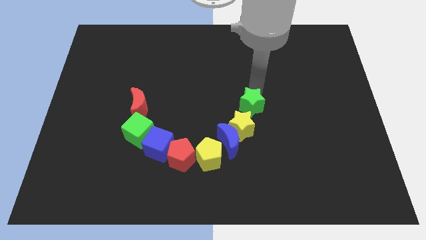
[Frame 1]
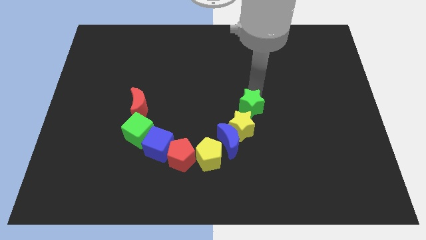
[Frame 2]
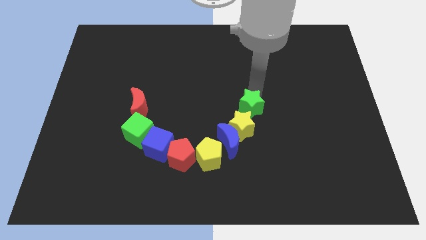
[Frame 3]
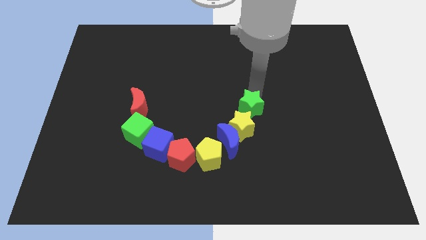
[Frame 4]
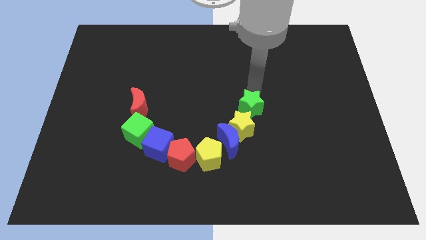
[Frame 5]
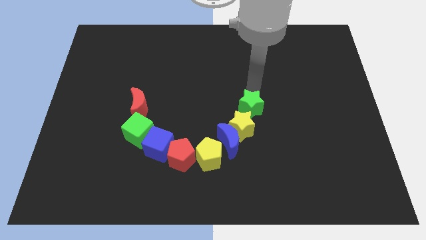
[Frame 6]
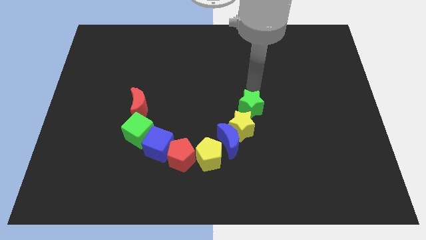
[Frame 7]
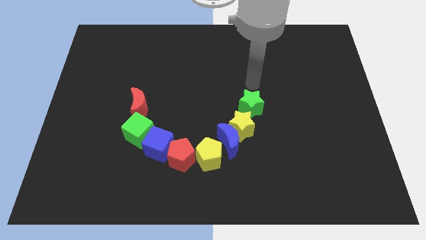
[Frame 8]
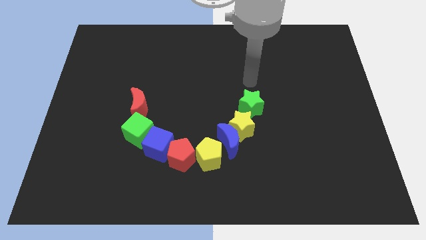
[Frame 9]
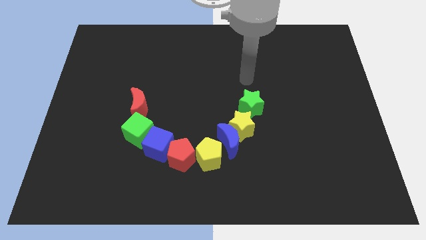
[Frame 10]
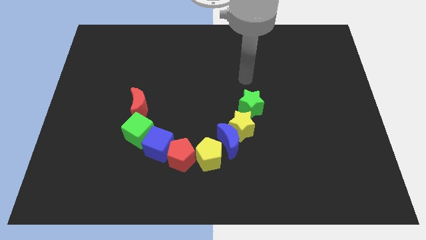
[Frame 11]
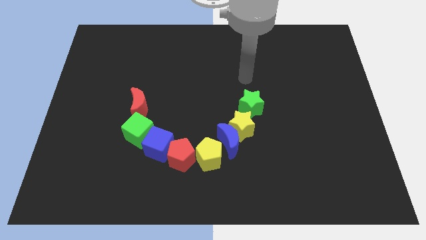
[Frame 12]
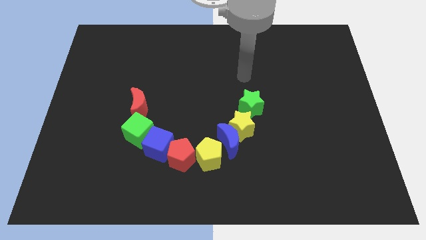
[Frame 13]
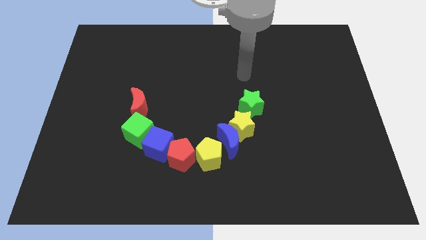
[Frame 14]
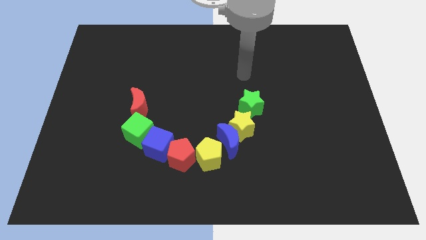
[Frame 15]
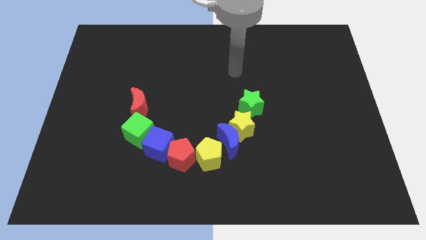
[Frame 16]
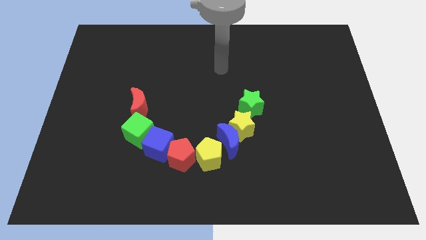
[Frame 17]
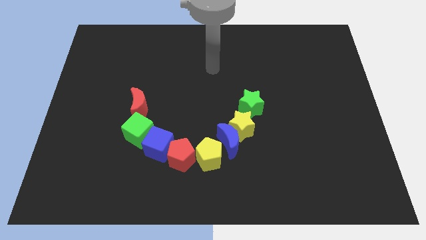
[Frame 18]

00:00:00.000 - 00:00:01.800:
move the green star close to the yellow star

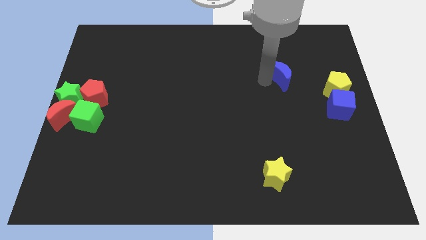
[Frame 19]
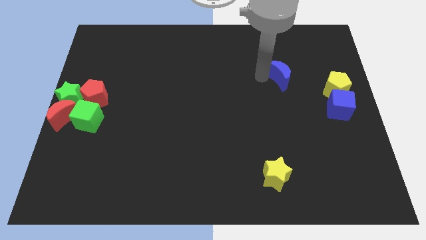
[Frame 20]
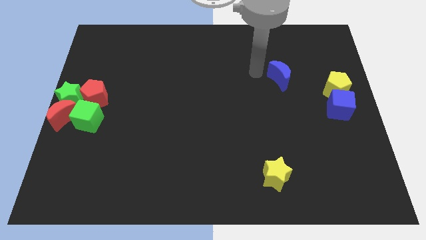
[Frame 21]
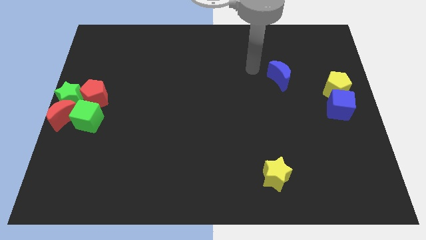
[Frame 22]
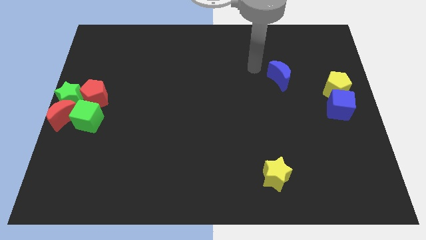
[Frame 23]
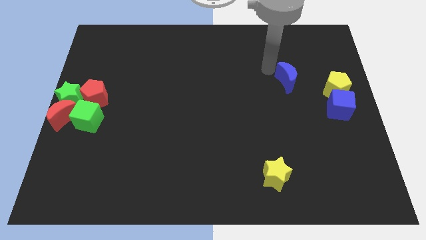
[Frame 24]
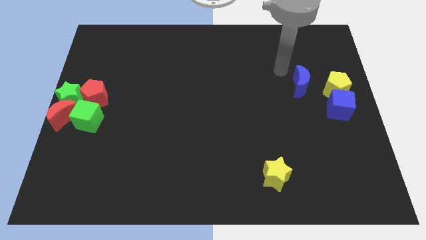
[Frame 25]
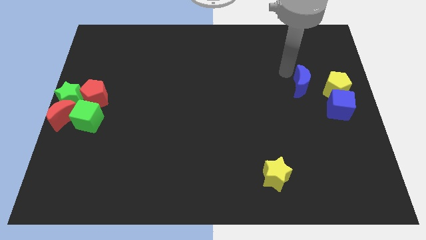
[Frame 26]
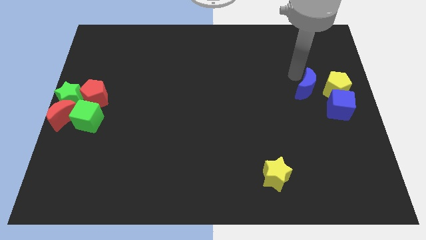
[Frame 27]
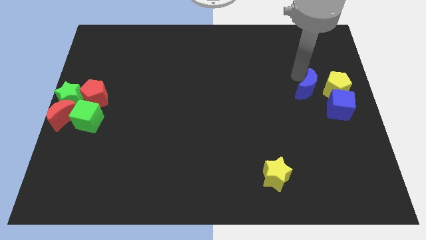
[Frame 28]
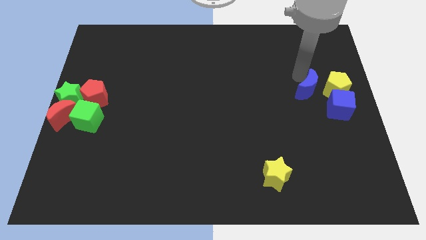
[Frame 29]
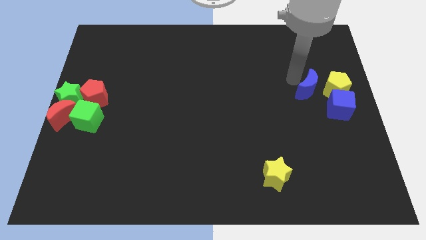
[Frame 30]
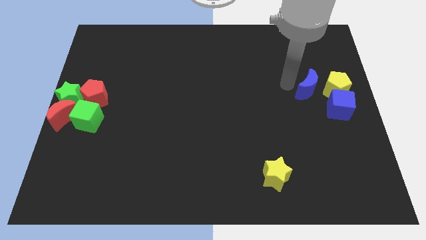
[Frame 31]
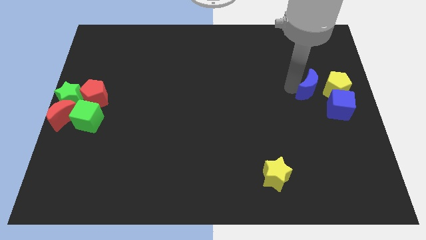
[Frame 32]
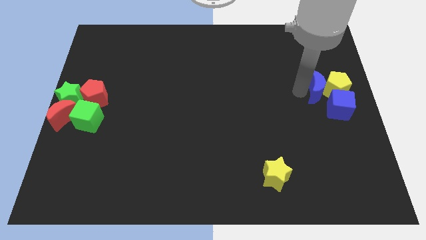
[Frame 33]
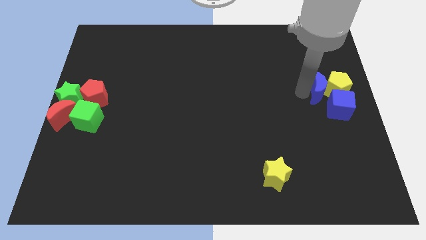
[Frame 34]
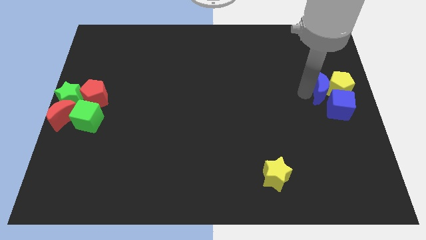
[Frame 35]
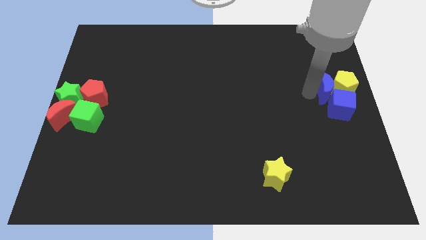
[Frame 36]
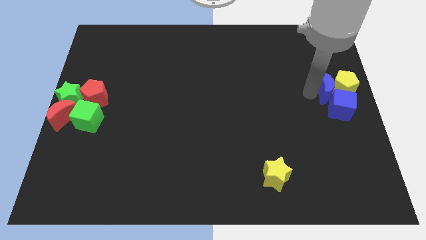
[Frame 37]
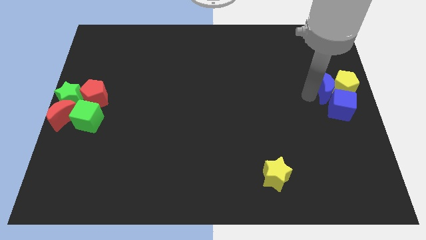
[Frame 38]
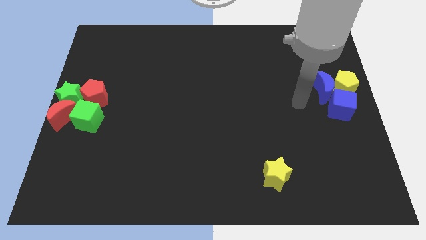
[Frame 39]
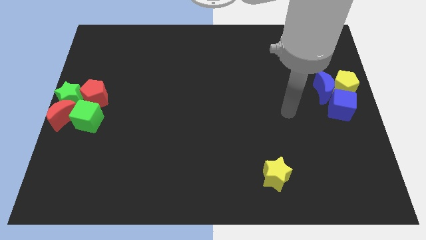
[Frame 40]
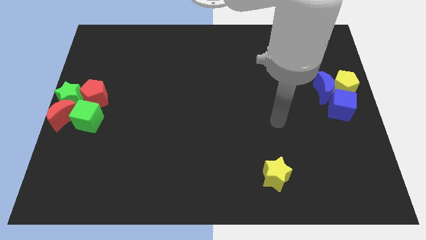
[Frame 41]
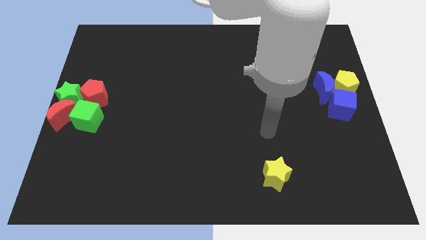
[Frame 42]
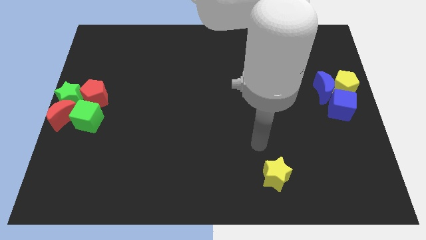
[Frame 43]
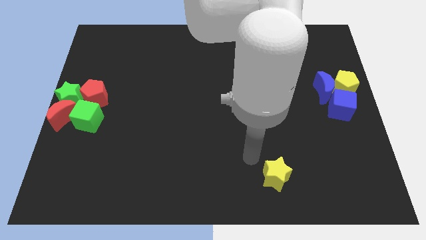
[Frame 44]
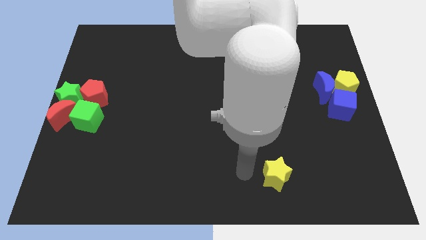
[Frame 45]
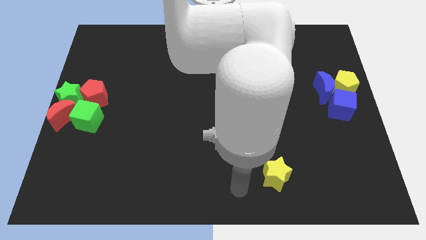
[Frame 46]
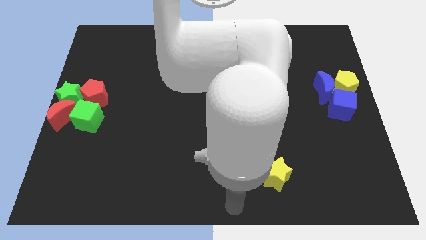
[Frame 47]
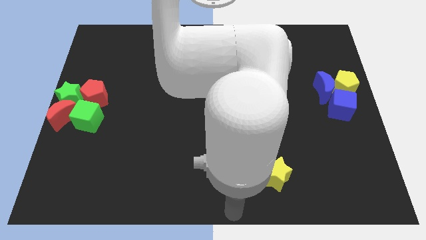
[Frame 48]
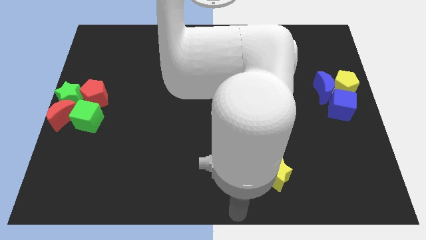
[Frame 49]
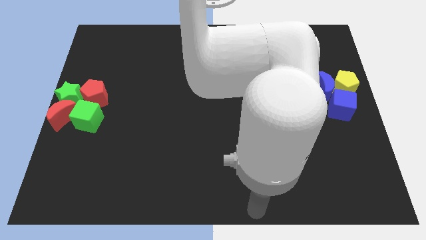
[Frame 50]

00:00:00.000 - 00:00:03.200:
drag the blue moon close to the yellow pentagon

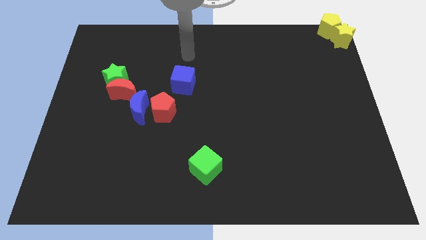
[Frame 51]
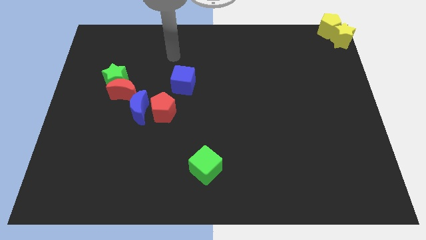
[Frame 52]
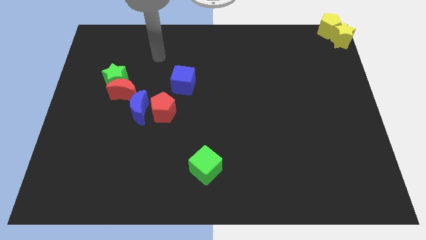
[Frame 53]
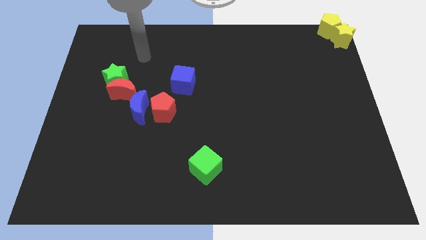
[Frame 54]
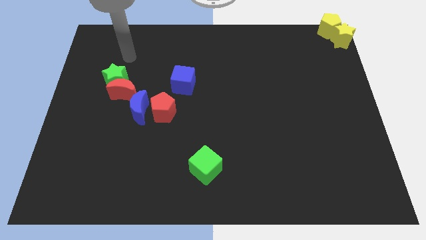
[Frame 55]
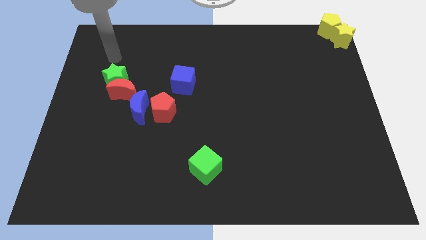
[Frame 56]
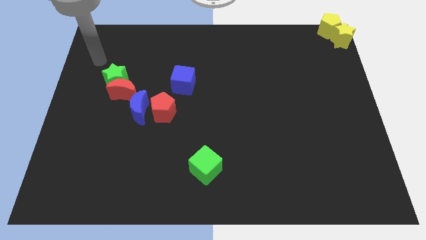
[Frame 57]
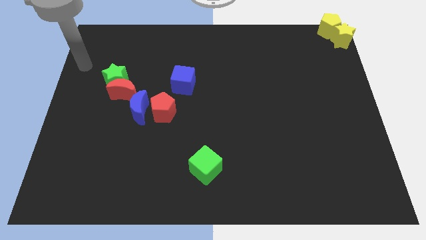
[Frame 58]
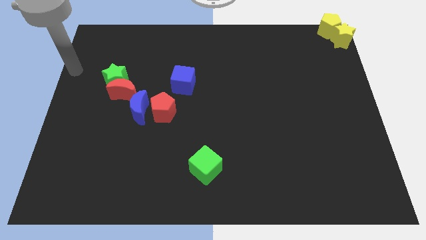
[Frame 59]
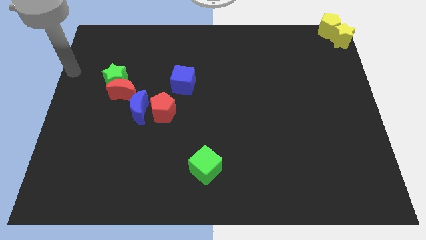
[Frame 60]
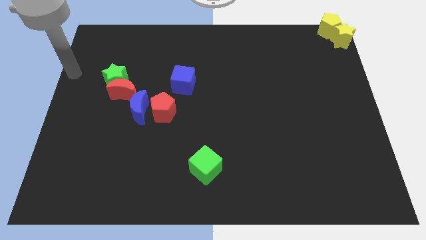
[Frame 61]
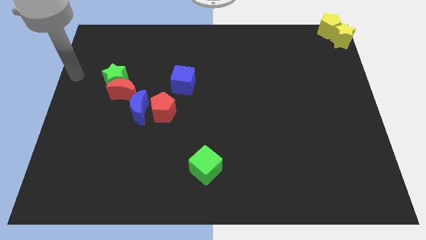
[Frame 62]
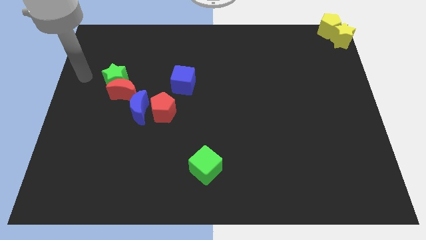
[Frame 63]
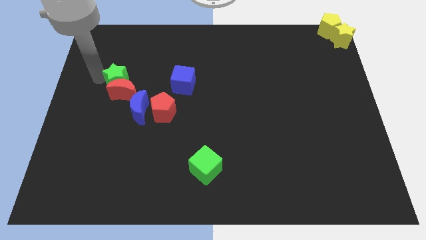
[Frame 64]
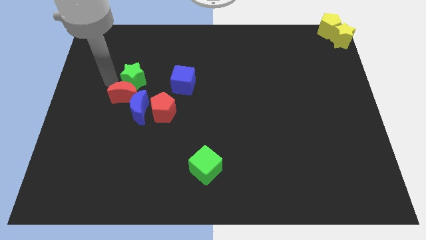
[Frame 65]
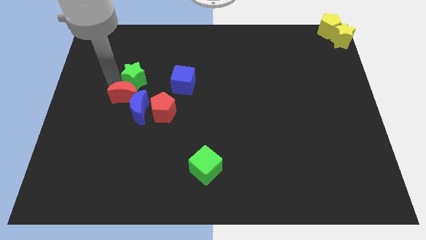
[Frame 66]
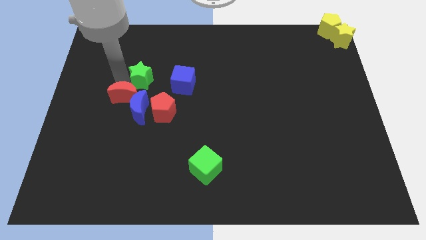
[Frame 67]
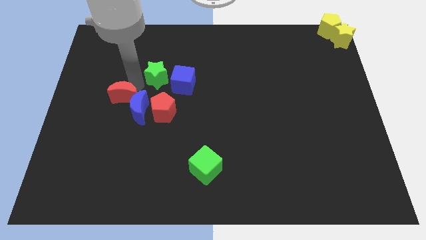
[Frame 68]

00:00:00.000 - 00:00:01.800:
separate the green star from the red crescent

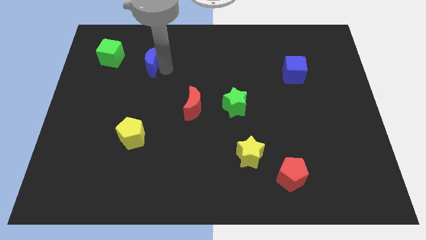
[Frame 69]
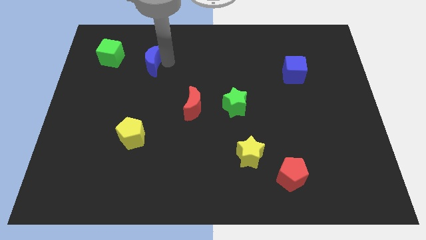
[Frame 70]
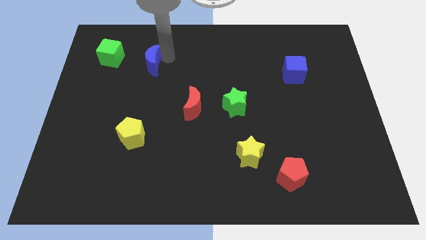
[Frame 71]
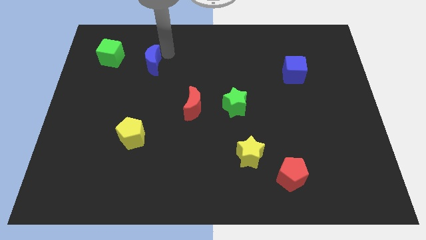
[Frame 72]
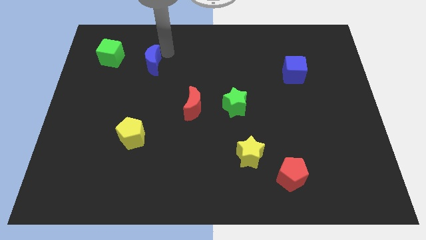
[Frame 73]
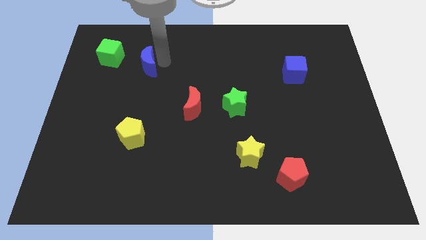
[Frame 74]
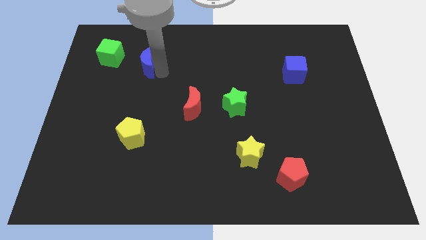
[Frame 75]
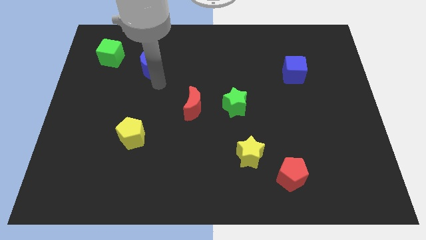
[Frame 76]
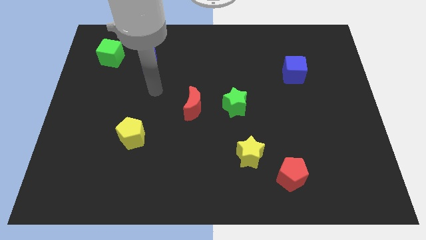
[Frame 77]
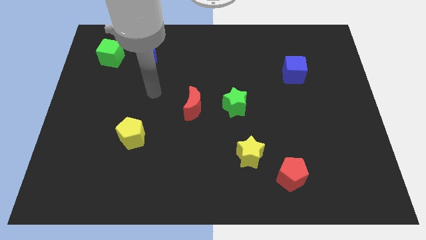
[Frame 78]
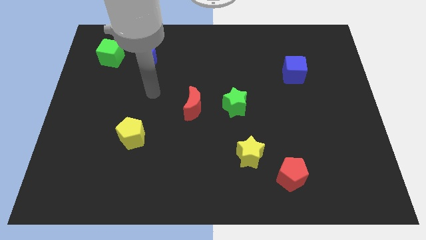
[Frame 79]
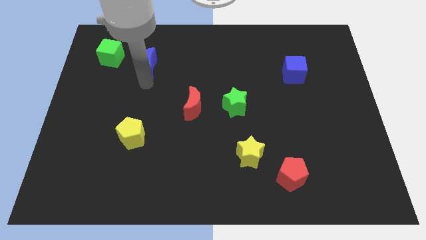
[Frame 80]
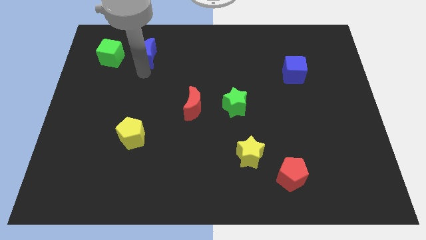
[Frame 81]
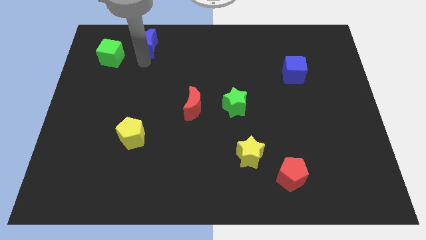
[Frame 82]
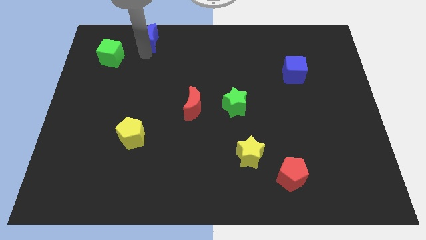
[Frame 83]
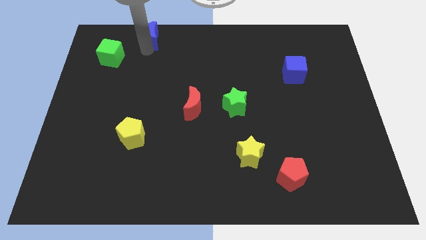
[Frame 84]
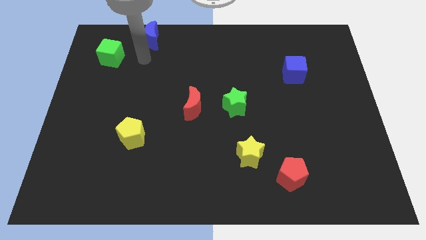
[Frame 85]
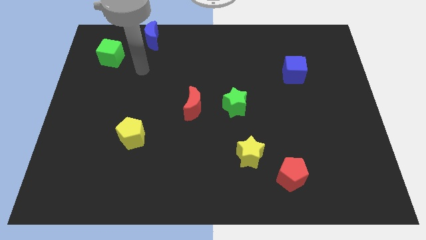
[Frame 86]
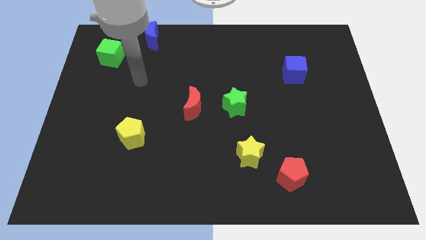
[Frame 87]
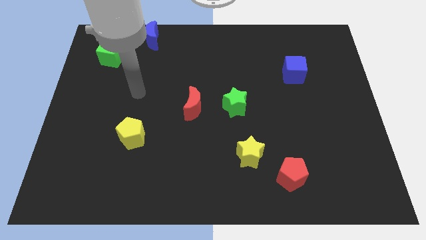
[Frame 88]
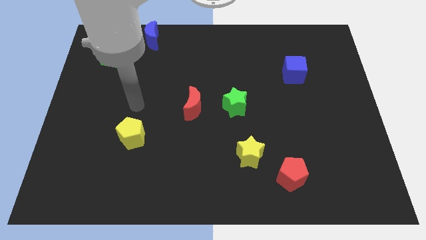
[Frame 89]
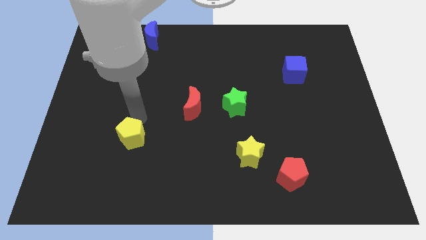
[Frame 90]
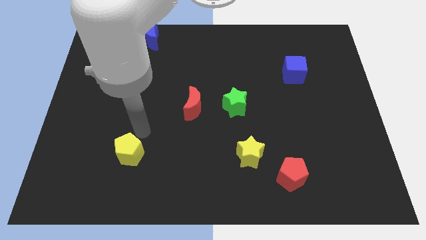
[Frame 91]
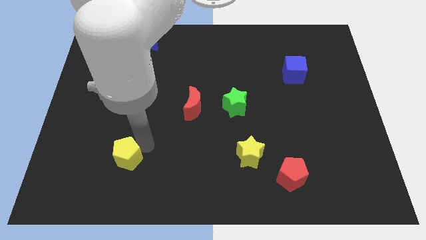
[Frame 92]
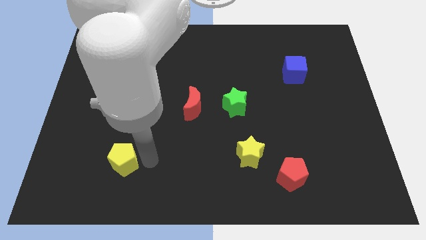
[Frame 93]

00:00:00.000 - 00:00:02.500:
slightly push the blue moon up
